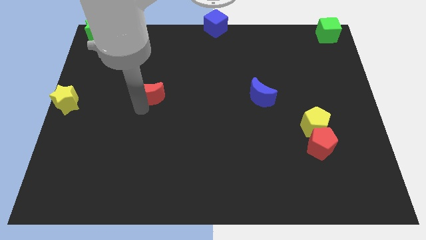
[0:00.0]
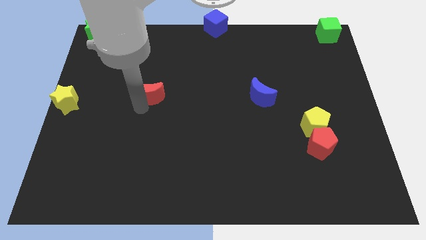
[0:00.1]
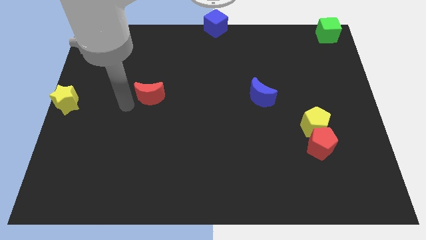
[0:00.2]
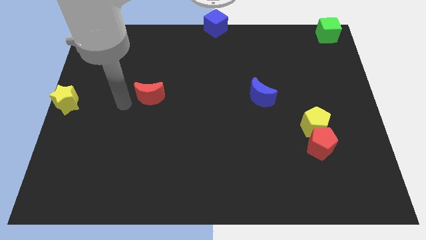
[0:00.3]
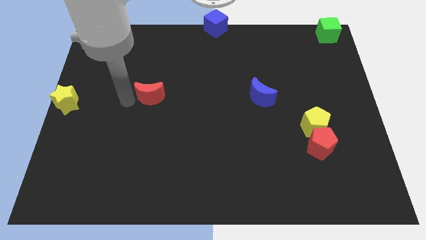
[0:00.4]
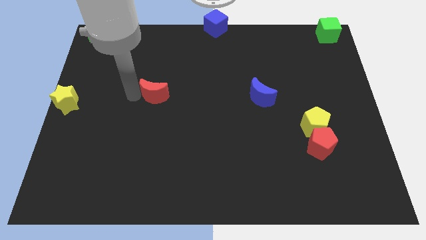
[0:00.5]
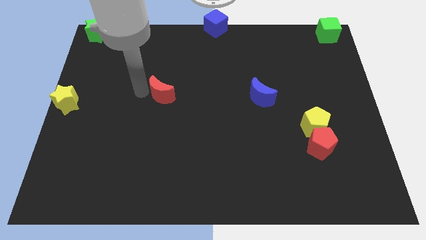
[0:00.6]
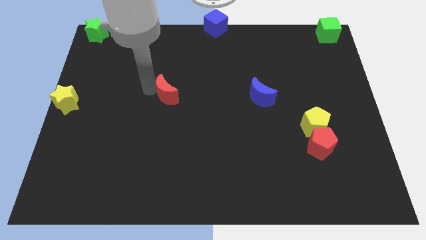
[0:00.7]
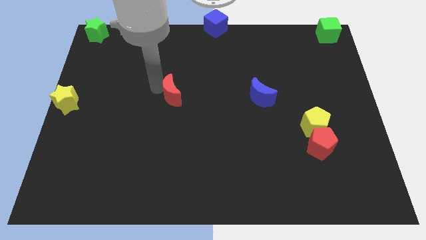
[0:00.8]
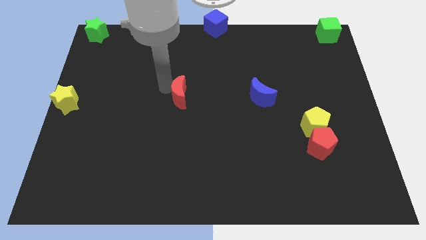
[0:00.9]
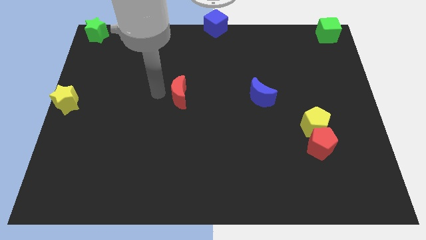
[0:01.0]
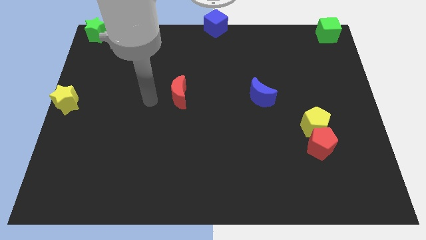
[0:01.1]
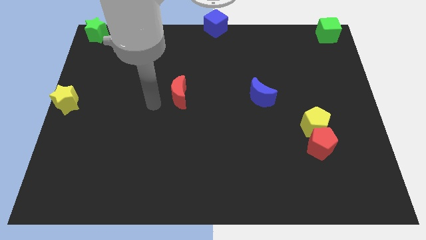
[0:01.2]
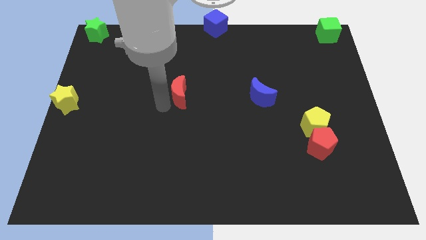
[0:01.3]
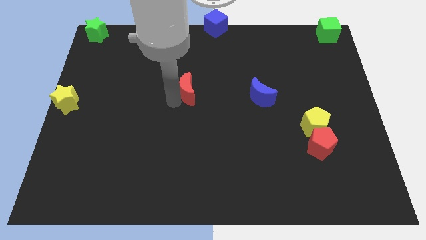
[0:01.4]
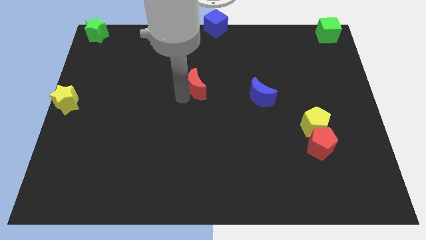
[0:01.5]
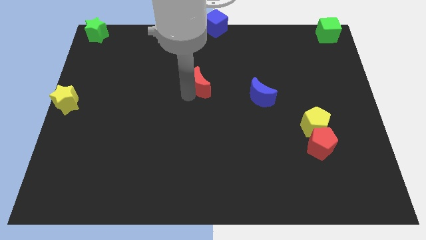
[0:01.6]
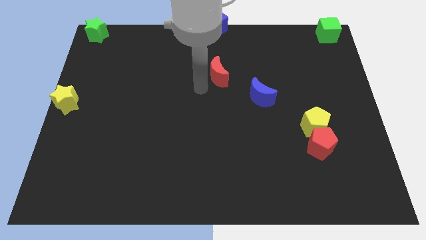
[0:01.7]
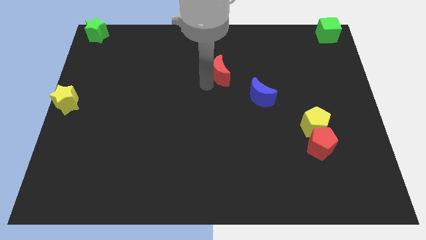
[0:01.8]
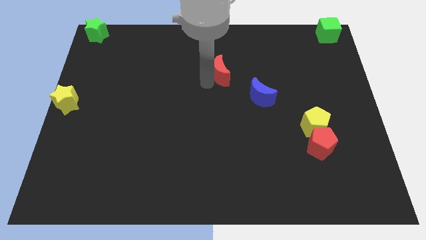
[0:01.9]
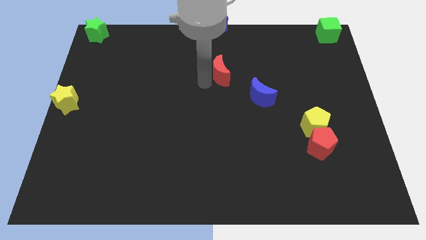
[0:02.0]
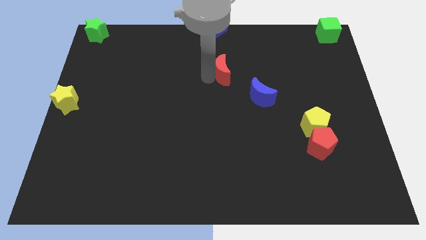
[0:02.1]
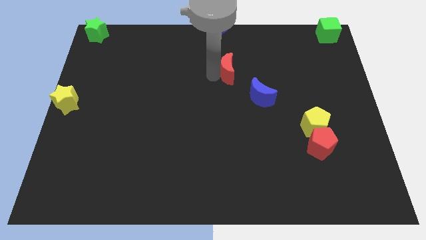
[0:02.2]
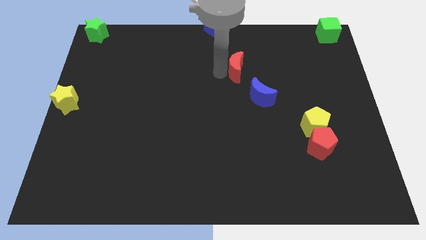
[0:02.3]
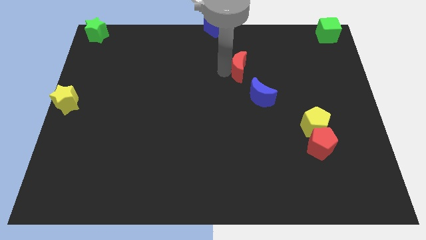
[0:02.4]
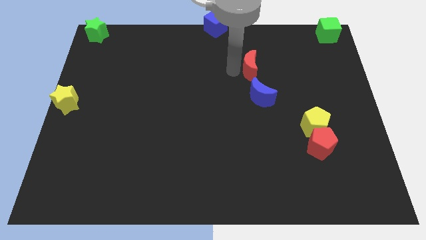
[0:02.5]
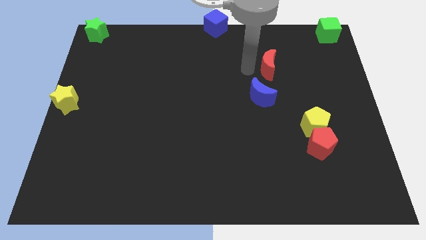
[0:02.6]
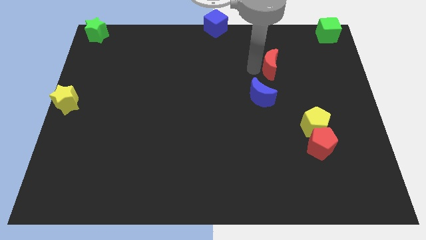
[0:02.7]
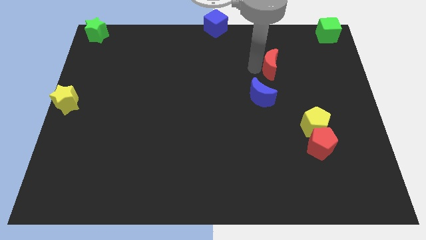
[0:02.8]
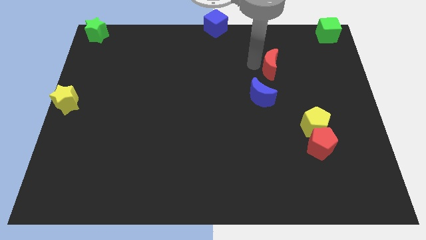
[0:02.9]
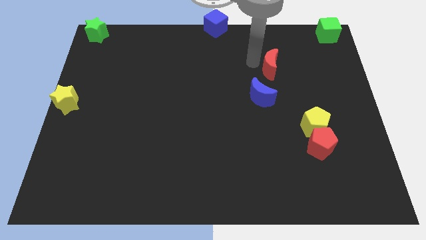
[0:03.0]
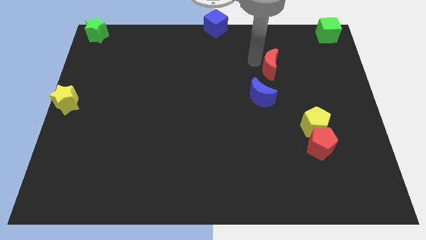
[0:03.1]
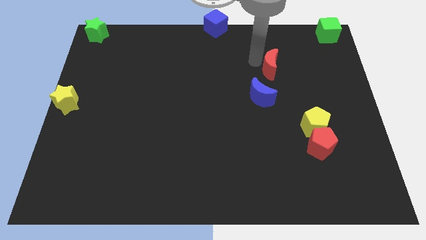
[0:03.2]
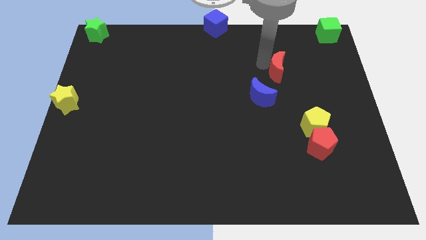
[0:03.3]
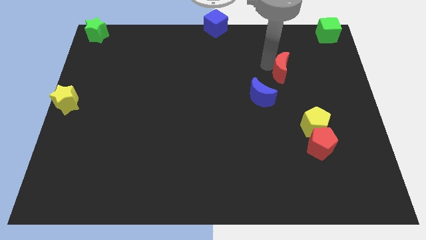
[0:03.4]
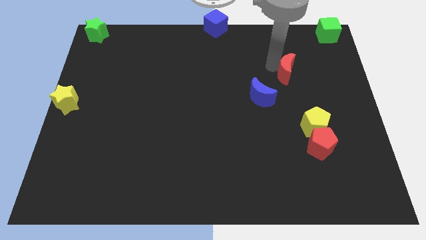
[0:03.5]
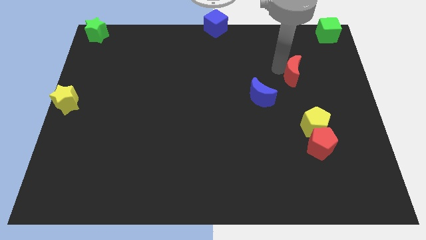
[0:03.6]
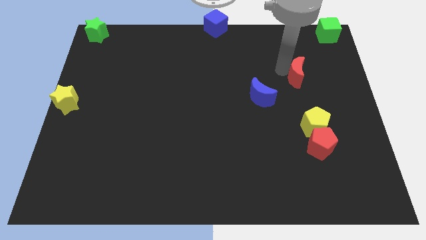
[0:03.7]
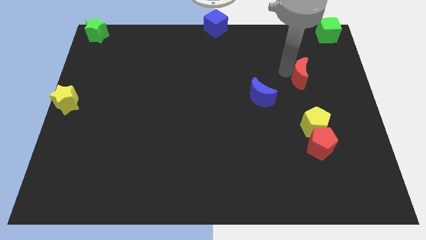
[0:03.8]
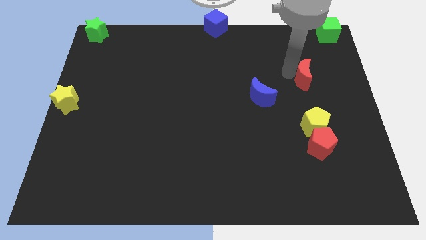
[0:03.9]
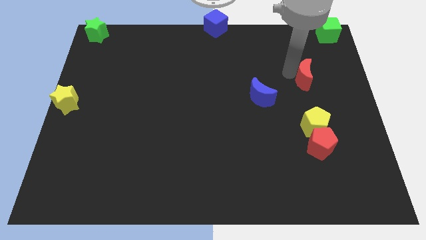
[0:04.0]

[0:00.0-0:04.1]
move the red moon towards the right side of the board

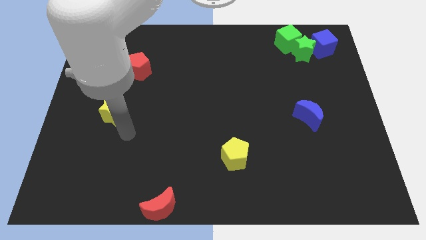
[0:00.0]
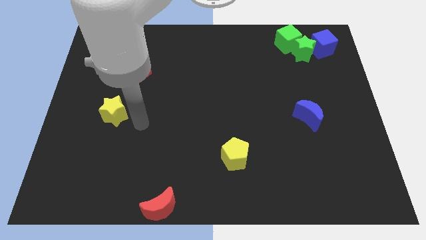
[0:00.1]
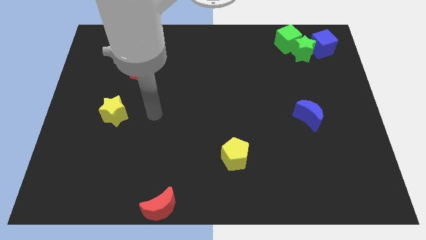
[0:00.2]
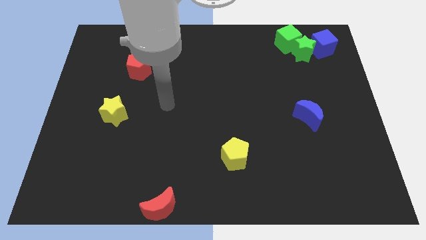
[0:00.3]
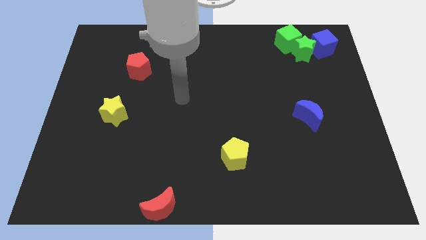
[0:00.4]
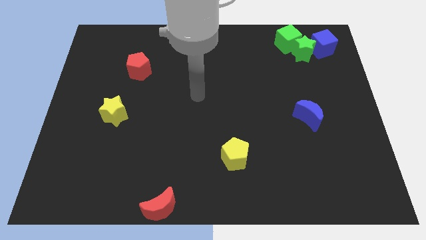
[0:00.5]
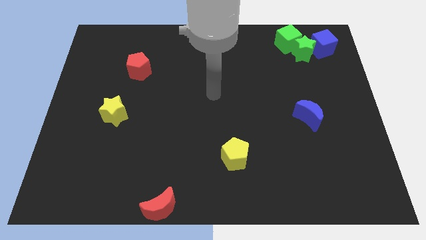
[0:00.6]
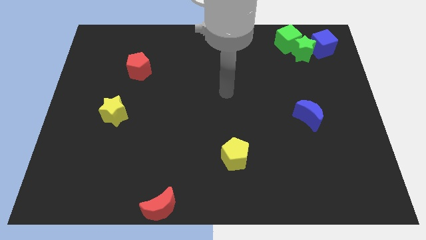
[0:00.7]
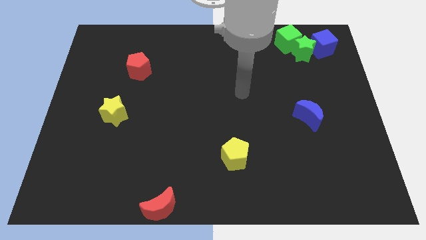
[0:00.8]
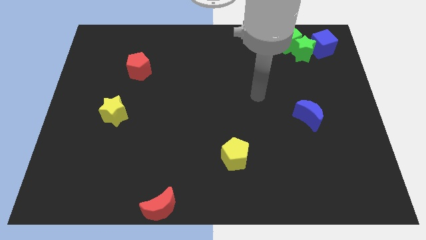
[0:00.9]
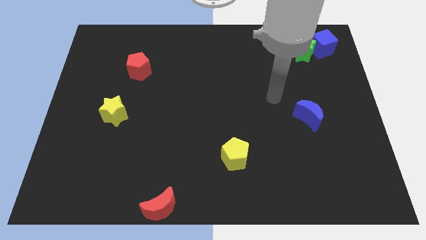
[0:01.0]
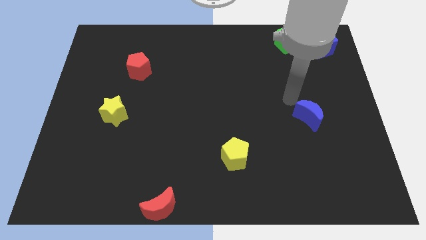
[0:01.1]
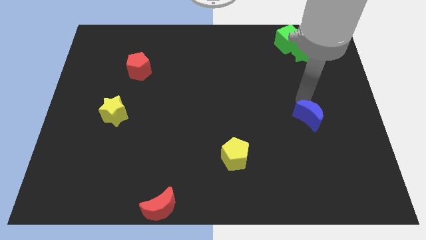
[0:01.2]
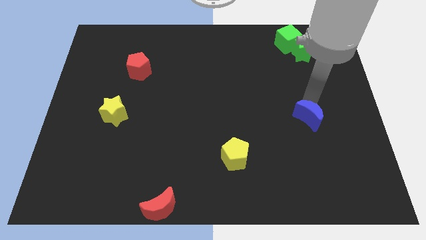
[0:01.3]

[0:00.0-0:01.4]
move the arm to the top of the blue crescent

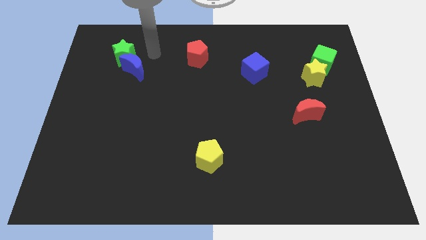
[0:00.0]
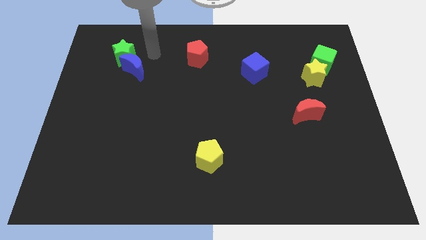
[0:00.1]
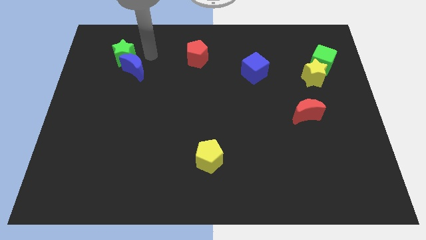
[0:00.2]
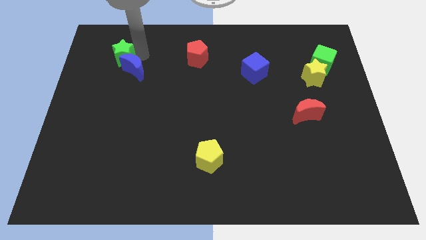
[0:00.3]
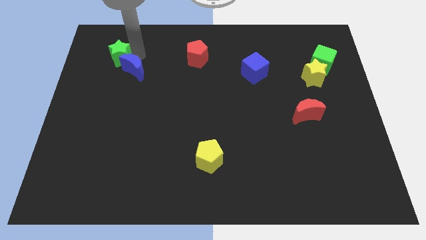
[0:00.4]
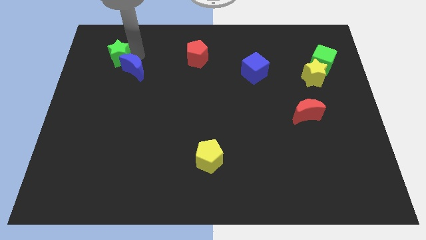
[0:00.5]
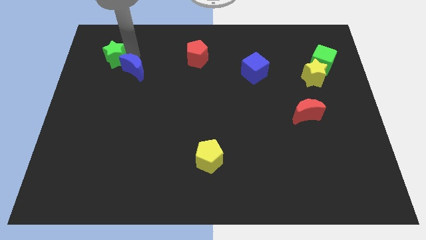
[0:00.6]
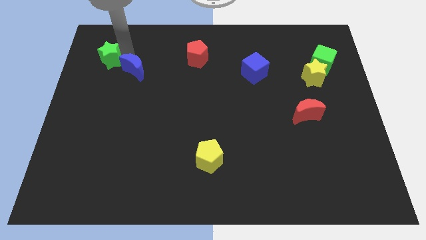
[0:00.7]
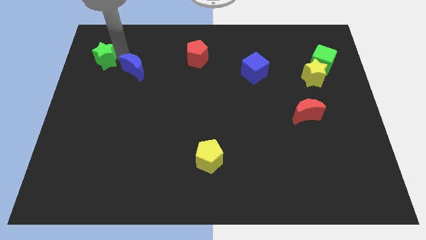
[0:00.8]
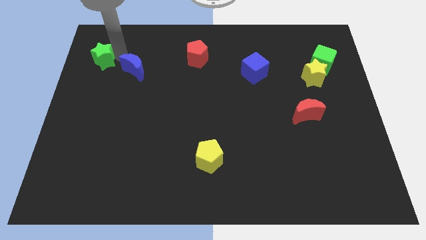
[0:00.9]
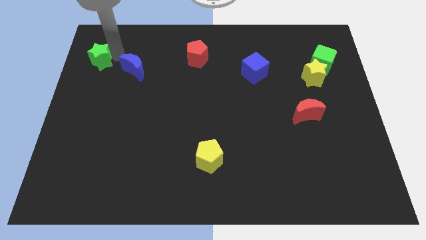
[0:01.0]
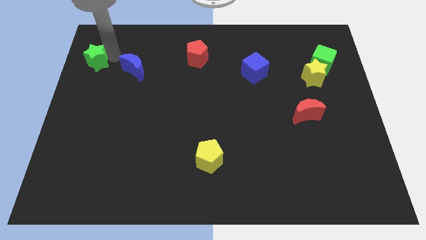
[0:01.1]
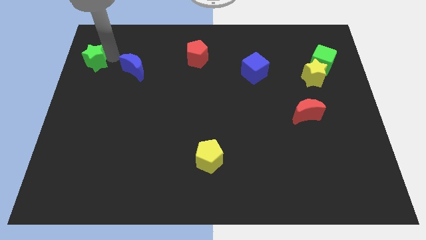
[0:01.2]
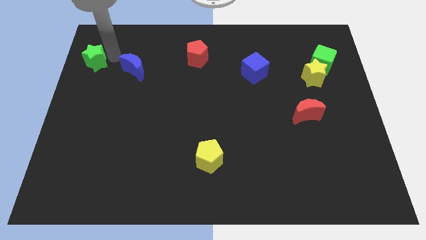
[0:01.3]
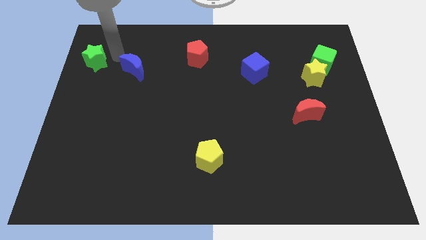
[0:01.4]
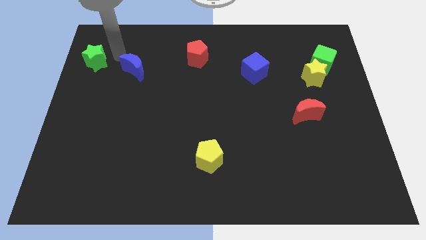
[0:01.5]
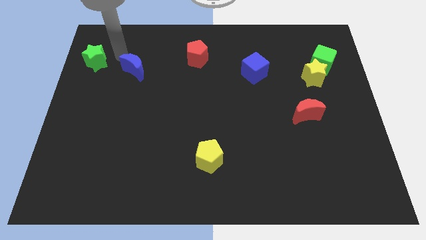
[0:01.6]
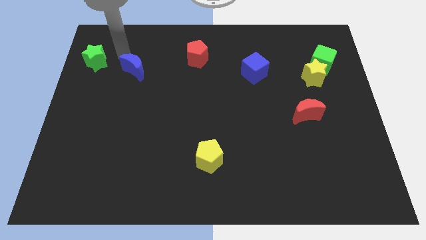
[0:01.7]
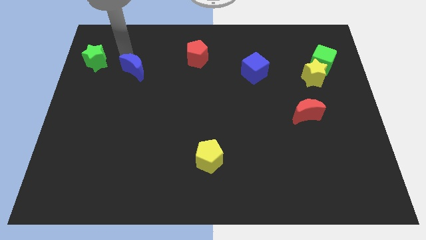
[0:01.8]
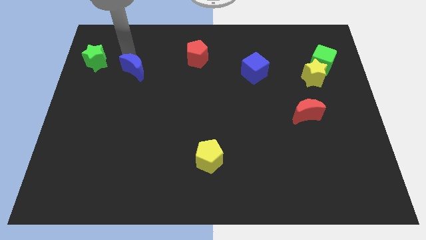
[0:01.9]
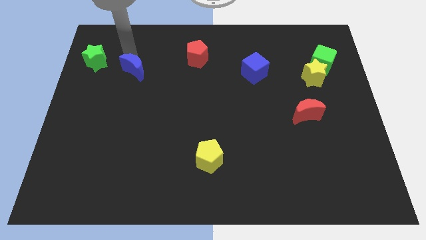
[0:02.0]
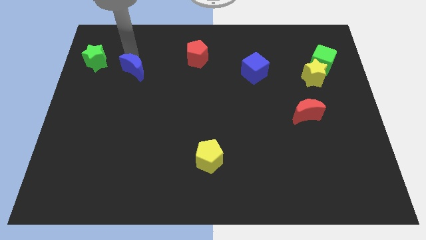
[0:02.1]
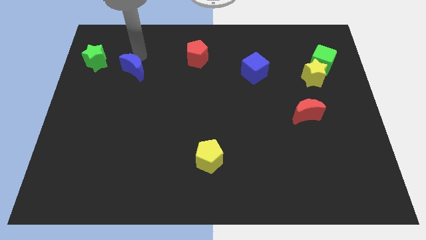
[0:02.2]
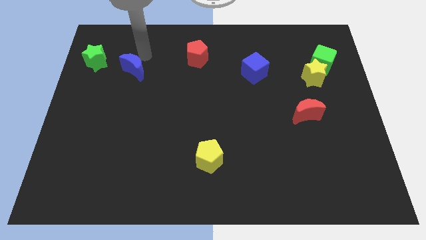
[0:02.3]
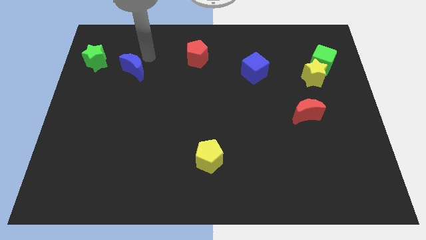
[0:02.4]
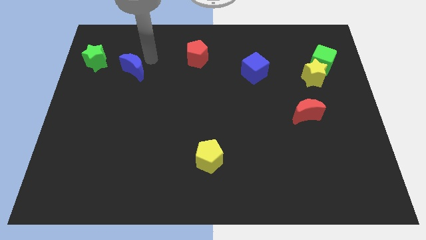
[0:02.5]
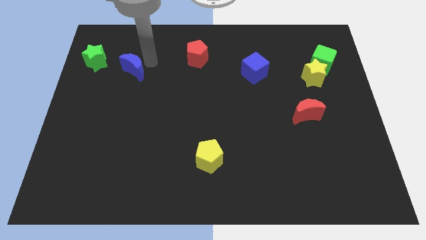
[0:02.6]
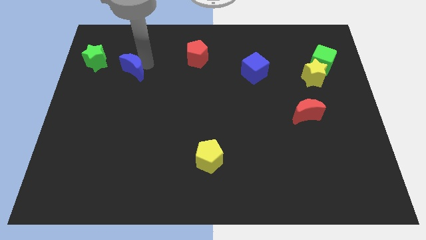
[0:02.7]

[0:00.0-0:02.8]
push the green star to the left of the blue crescent

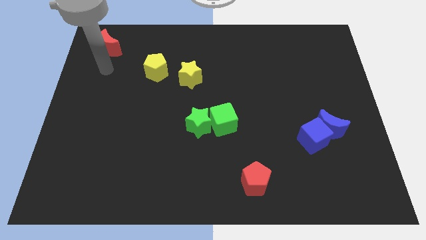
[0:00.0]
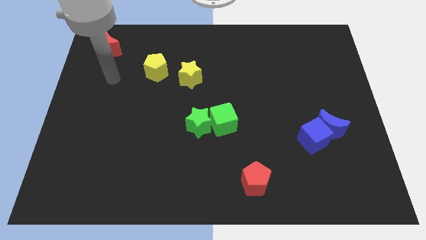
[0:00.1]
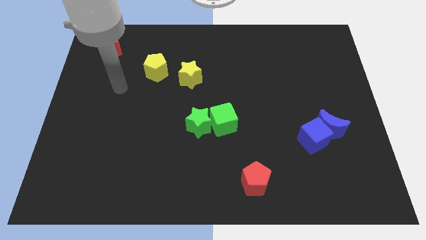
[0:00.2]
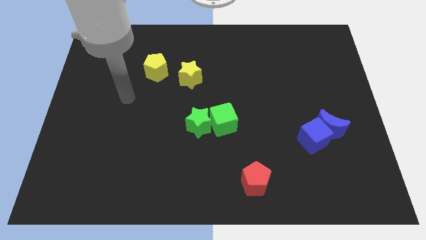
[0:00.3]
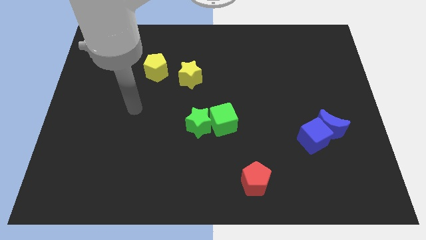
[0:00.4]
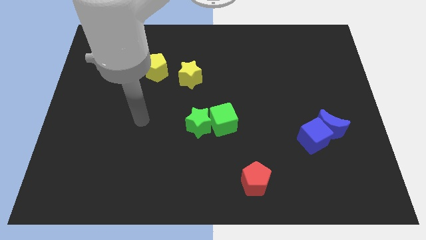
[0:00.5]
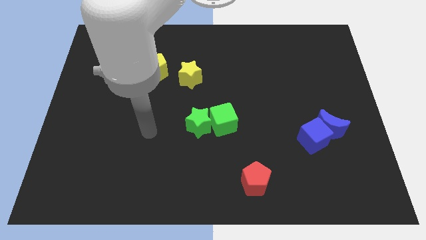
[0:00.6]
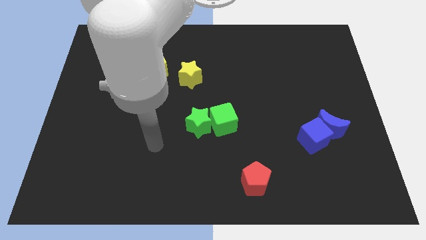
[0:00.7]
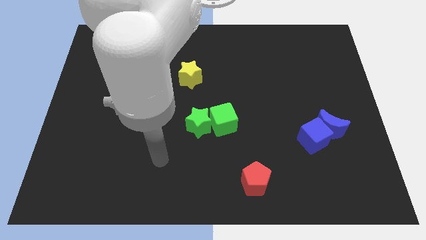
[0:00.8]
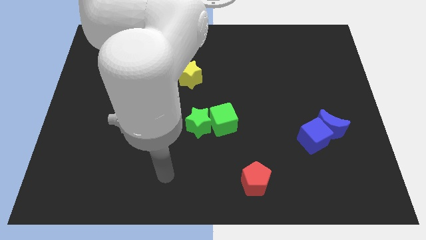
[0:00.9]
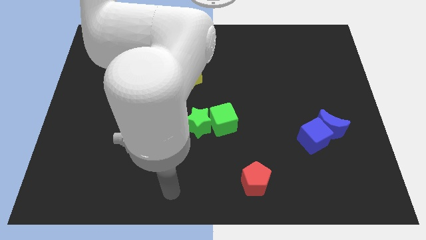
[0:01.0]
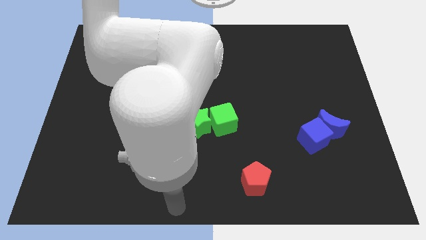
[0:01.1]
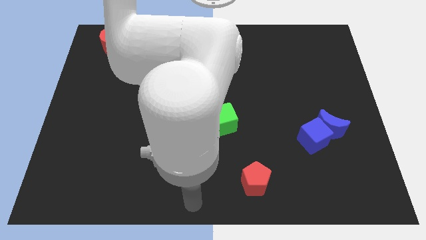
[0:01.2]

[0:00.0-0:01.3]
move your arm to the bottom center of the board
